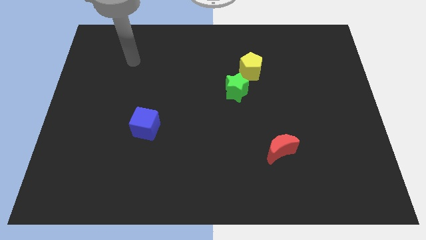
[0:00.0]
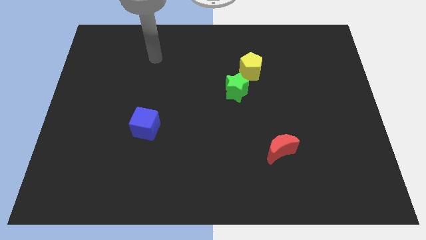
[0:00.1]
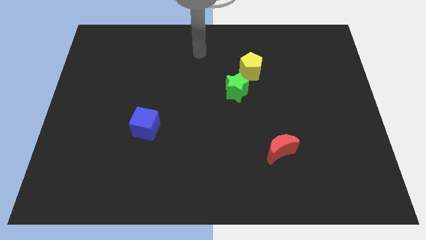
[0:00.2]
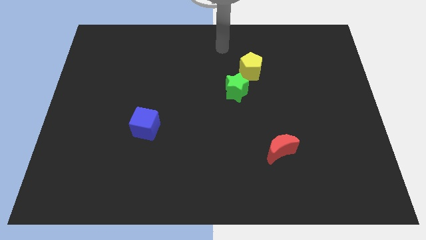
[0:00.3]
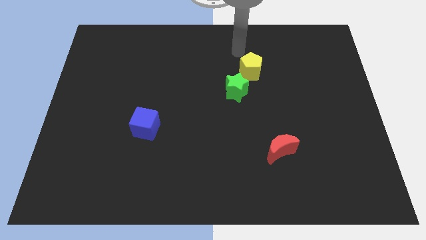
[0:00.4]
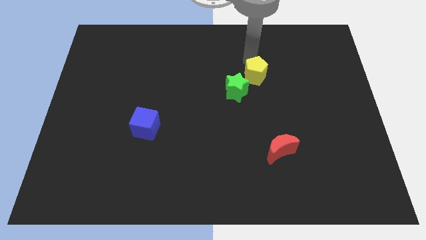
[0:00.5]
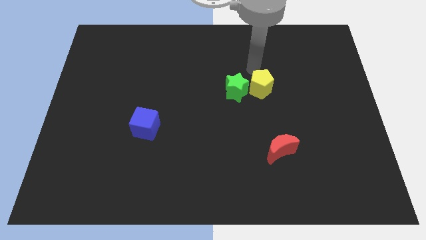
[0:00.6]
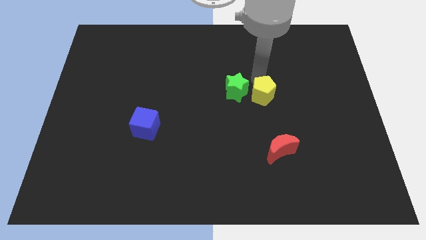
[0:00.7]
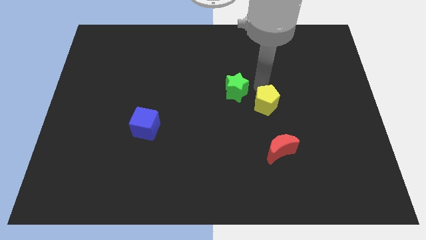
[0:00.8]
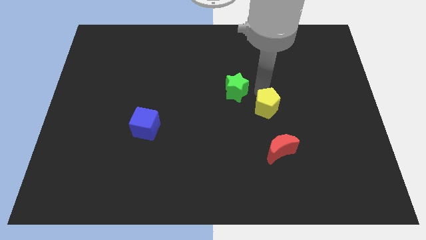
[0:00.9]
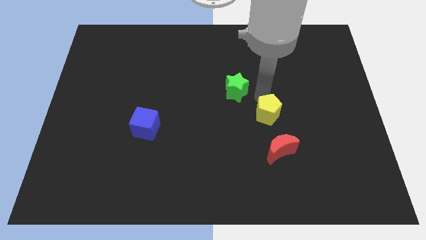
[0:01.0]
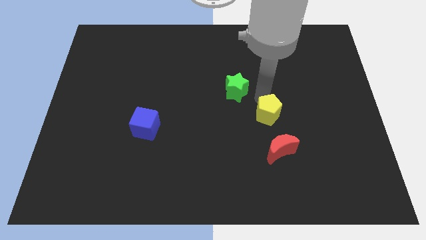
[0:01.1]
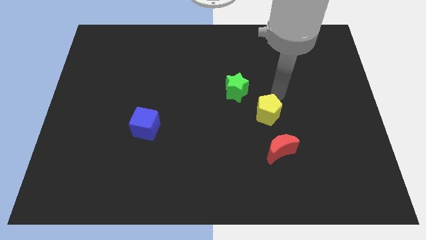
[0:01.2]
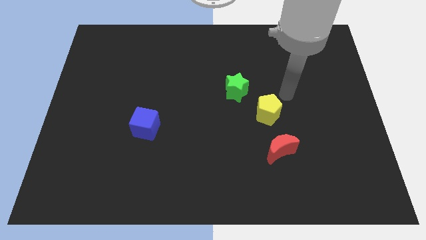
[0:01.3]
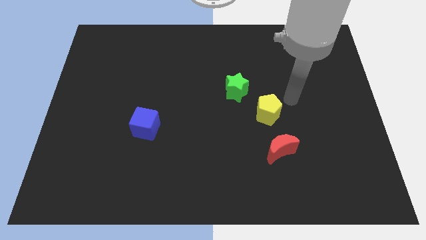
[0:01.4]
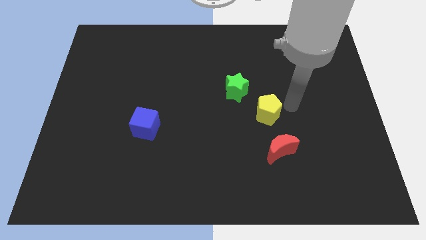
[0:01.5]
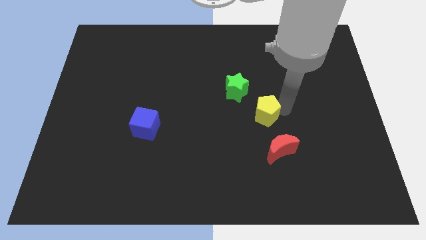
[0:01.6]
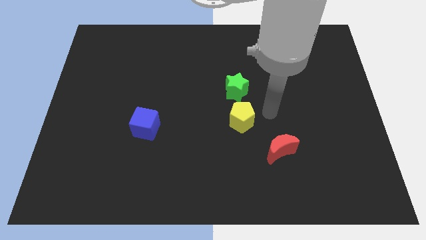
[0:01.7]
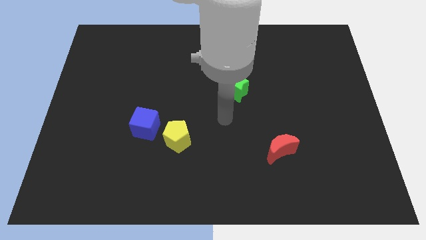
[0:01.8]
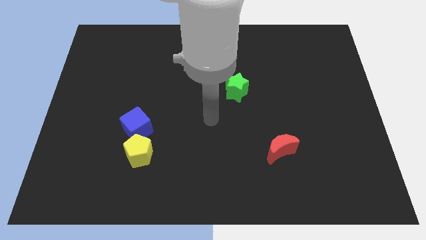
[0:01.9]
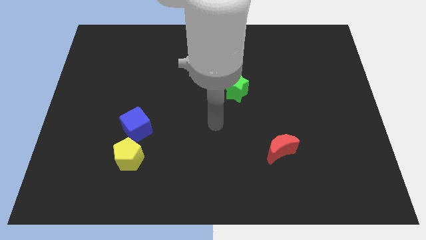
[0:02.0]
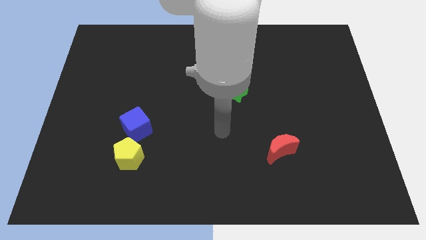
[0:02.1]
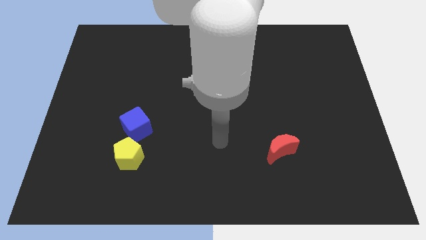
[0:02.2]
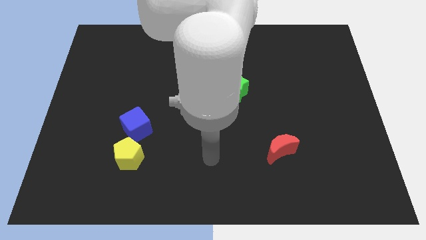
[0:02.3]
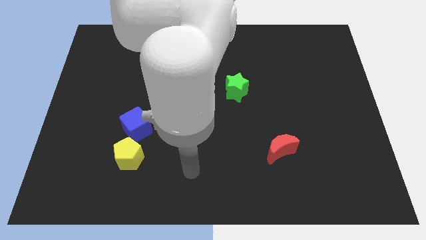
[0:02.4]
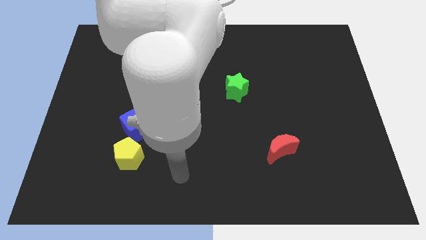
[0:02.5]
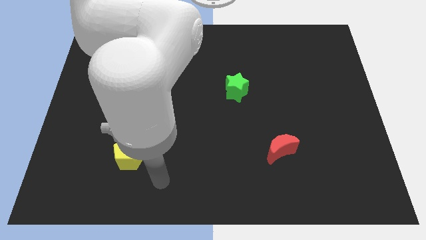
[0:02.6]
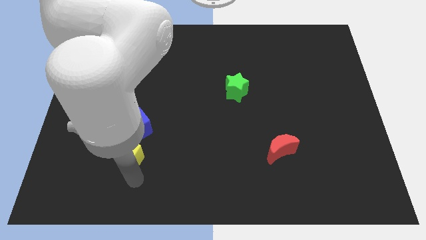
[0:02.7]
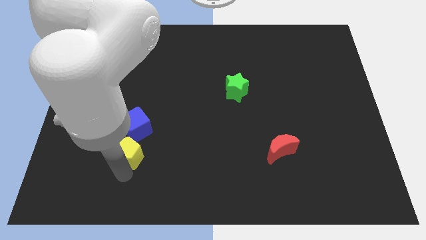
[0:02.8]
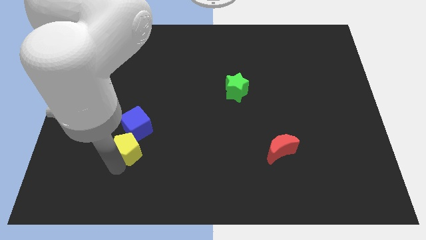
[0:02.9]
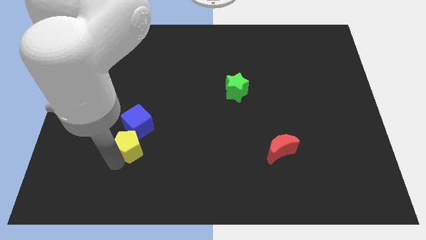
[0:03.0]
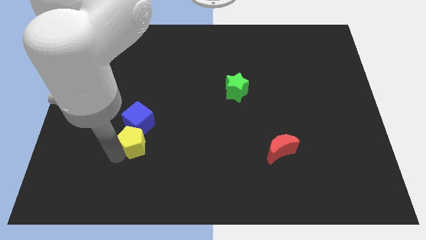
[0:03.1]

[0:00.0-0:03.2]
move the yellow block next to the cube

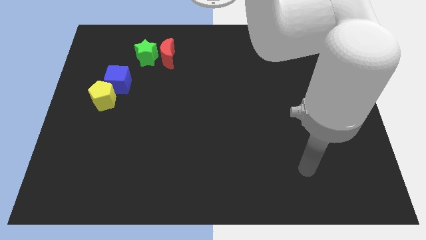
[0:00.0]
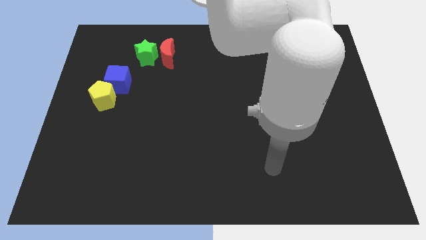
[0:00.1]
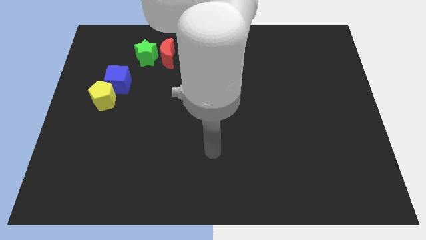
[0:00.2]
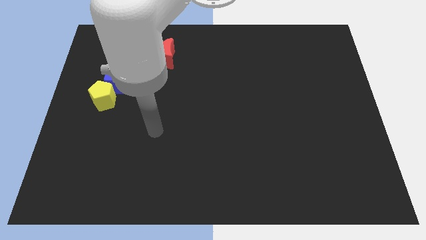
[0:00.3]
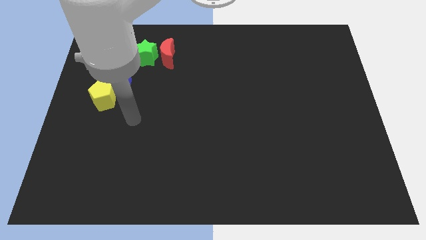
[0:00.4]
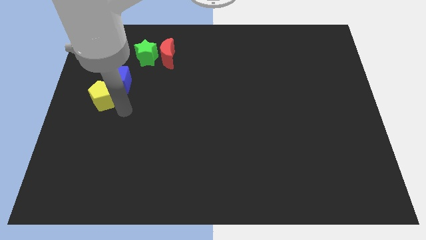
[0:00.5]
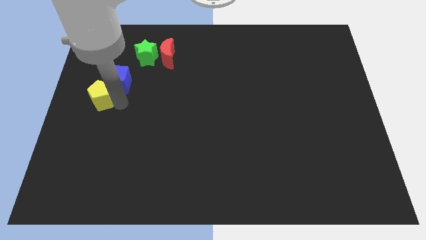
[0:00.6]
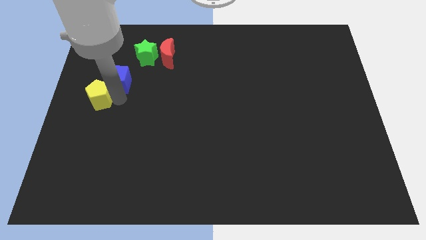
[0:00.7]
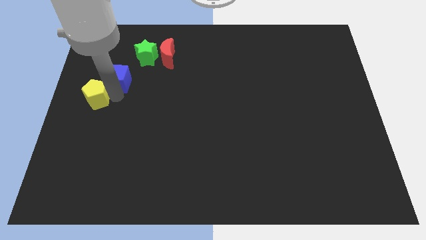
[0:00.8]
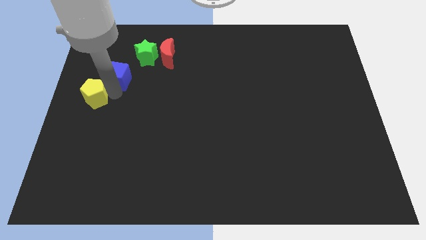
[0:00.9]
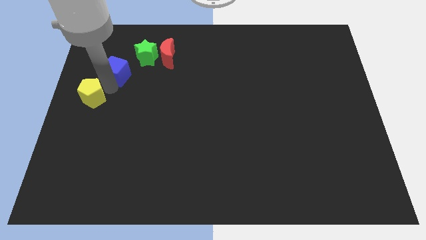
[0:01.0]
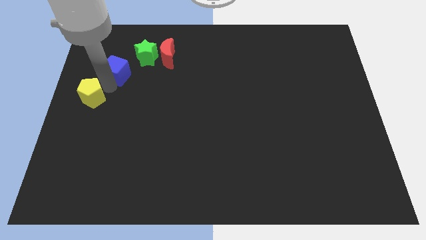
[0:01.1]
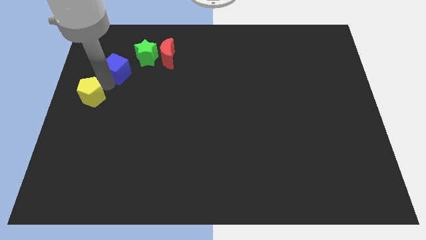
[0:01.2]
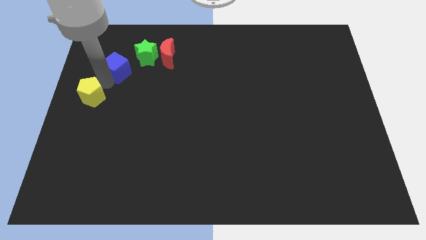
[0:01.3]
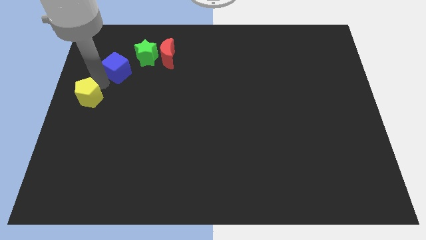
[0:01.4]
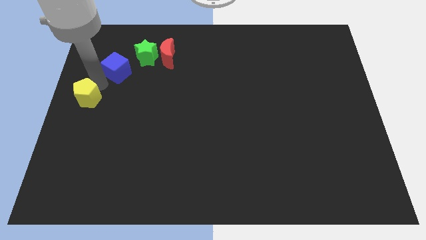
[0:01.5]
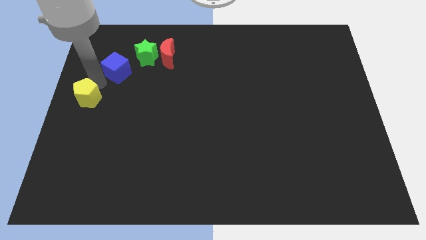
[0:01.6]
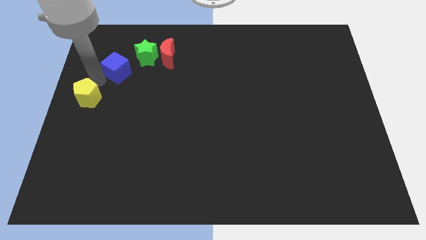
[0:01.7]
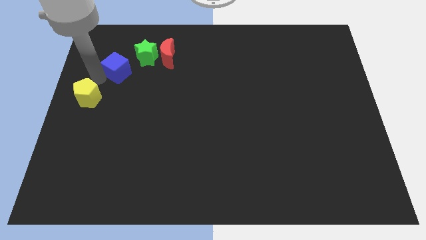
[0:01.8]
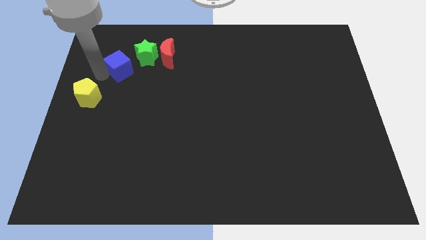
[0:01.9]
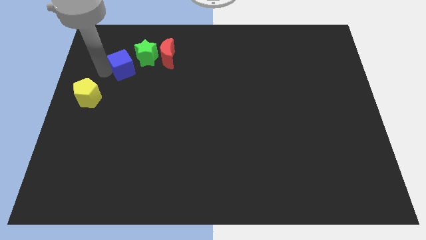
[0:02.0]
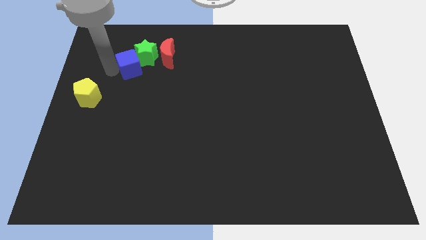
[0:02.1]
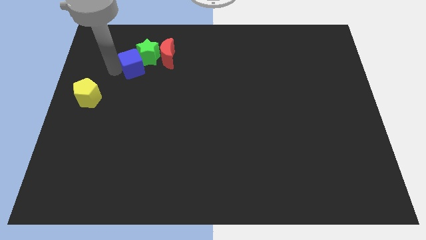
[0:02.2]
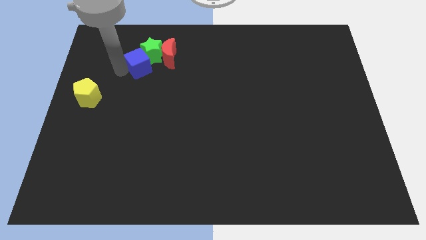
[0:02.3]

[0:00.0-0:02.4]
push the cube close to the green star

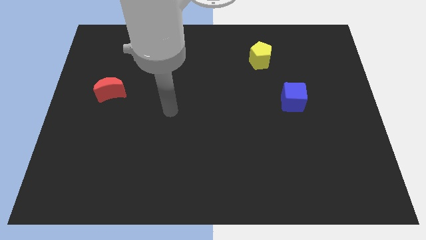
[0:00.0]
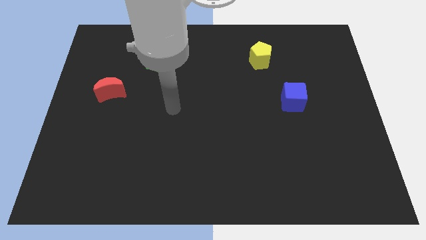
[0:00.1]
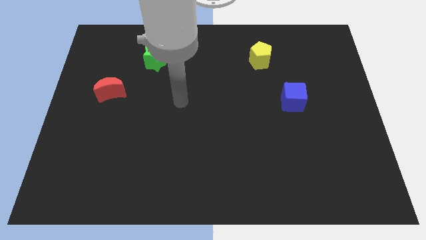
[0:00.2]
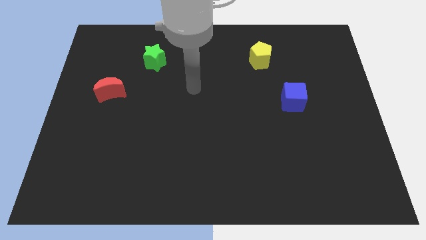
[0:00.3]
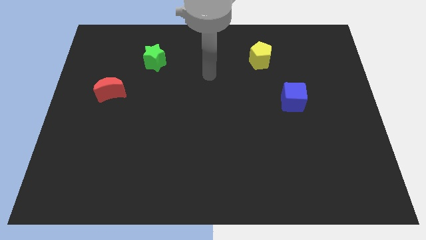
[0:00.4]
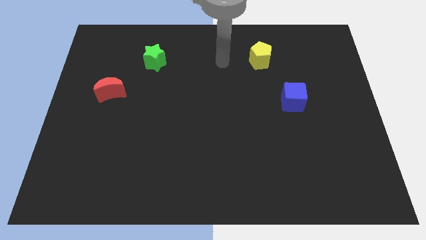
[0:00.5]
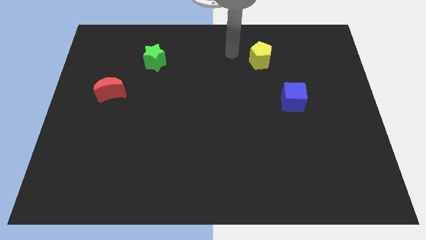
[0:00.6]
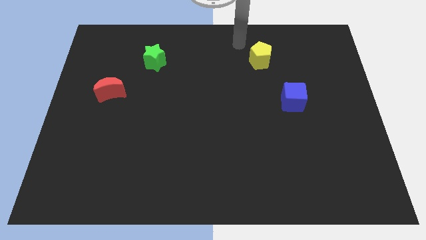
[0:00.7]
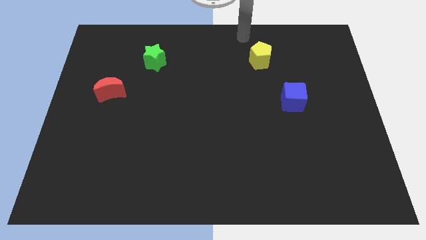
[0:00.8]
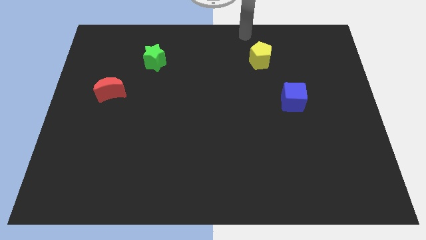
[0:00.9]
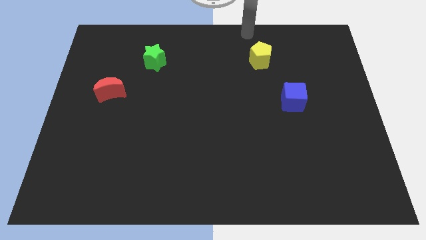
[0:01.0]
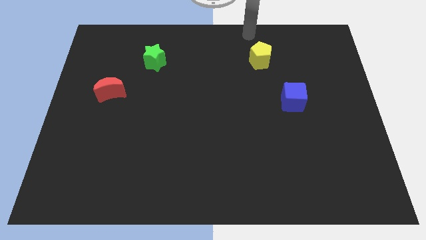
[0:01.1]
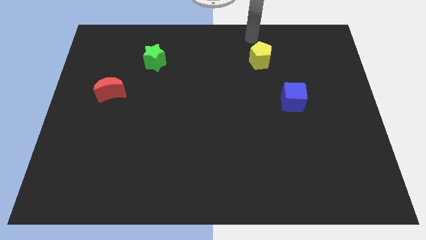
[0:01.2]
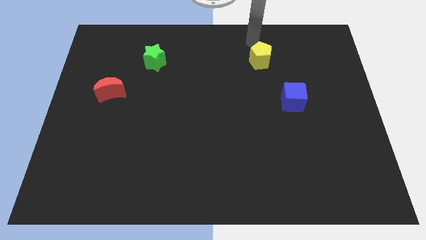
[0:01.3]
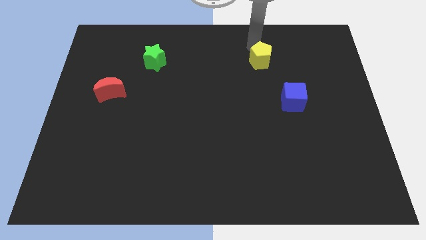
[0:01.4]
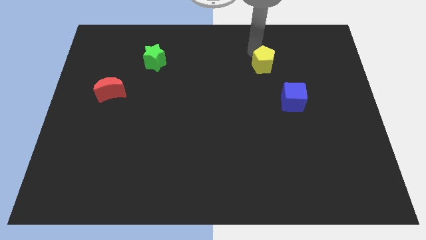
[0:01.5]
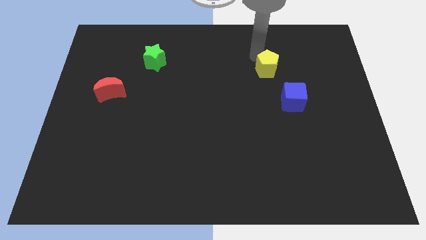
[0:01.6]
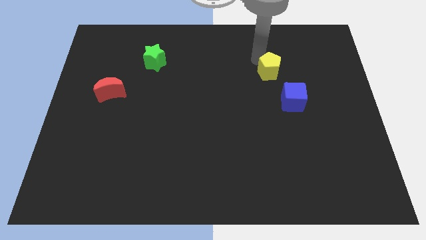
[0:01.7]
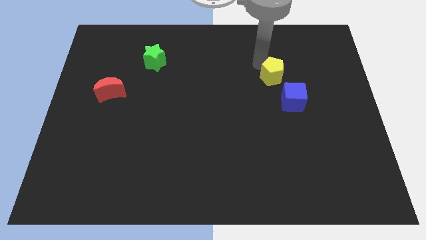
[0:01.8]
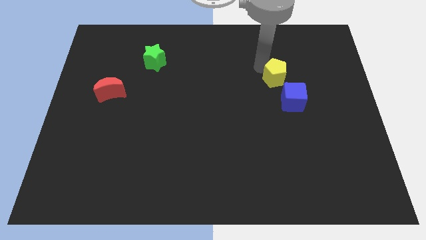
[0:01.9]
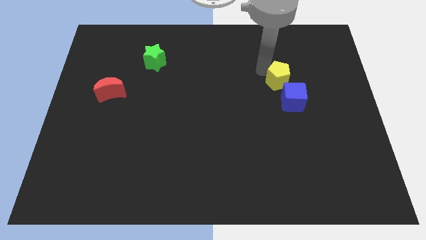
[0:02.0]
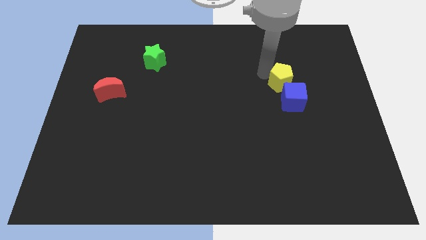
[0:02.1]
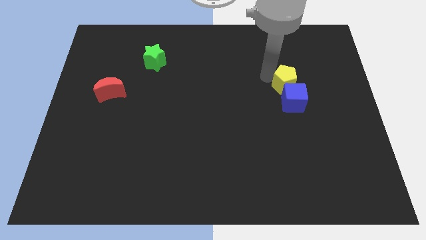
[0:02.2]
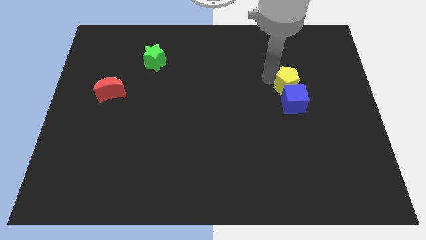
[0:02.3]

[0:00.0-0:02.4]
push the yellow pentagon next to the blue block

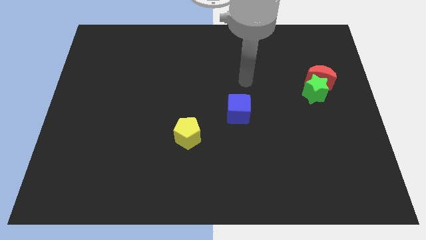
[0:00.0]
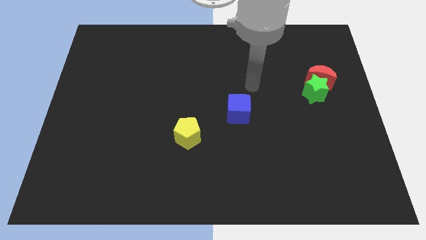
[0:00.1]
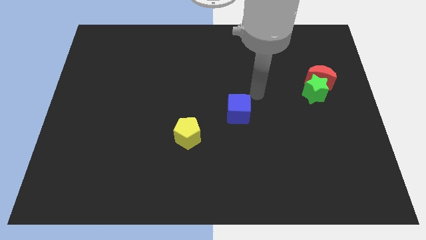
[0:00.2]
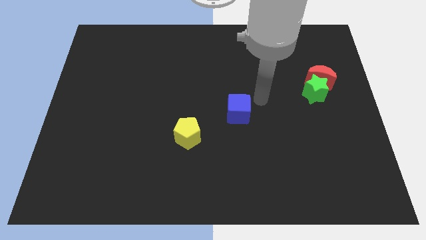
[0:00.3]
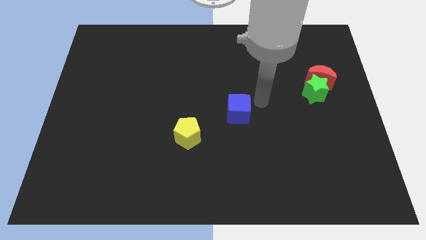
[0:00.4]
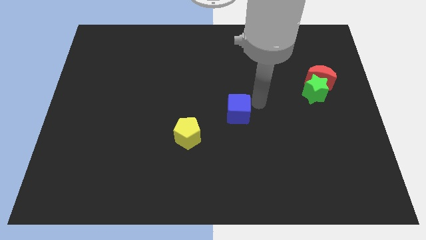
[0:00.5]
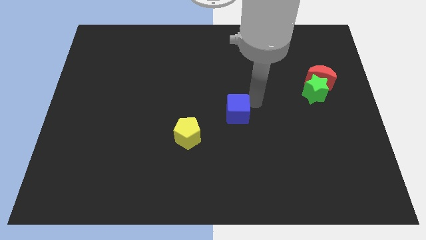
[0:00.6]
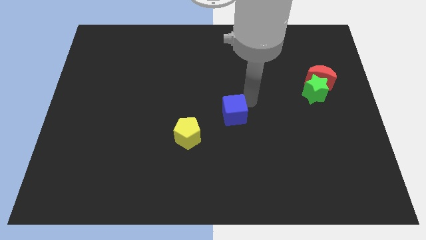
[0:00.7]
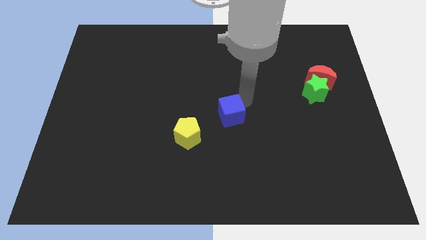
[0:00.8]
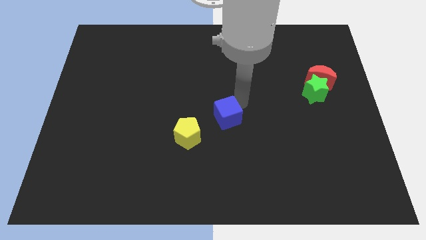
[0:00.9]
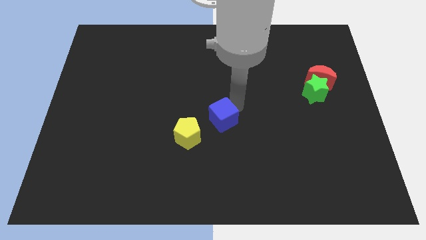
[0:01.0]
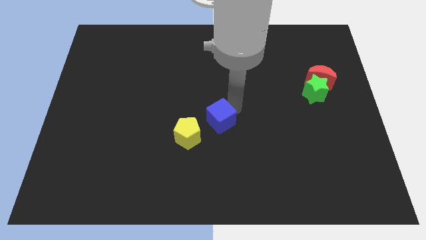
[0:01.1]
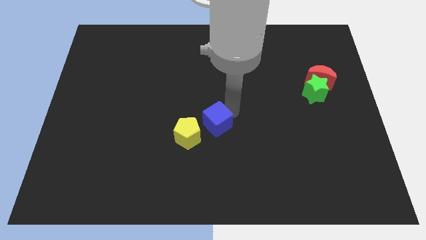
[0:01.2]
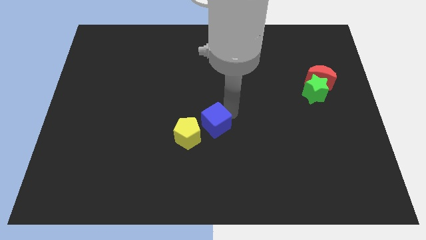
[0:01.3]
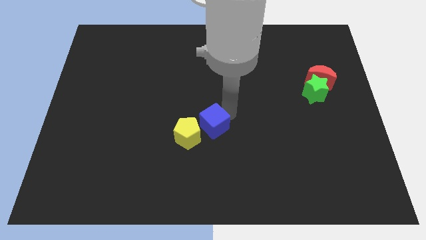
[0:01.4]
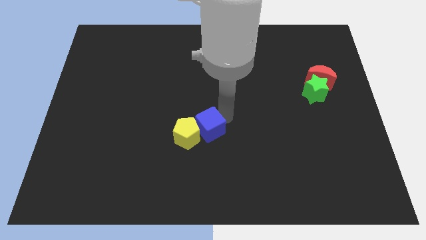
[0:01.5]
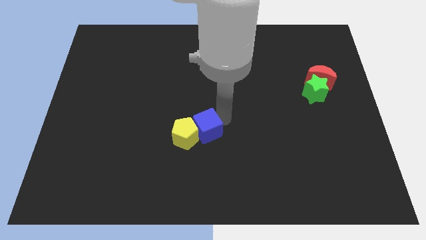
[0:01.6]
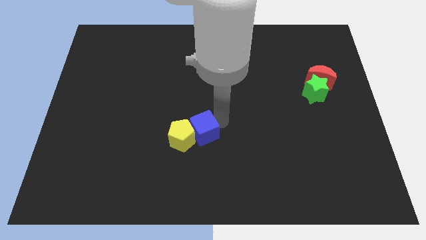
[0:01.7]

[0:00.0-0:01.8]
move the blue block next to the yellow block
